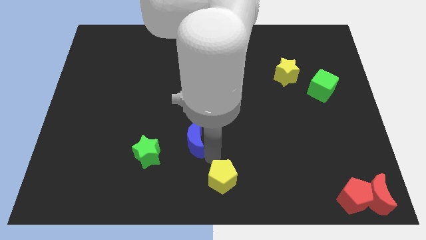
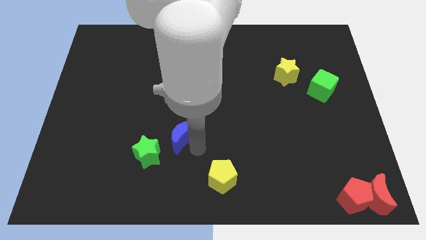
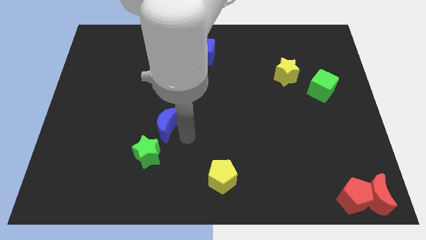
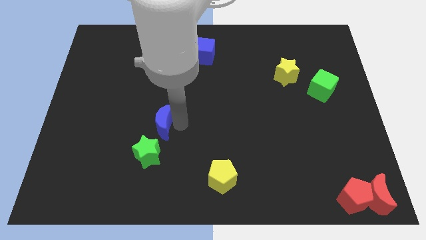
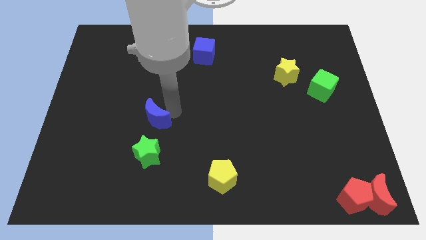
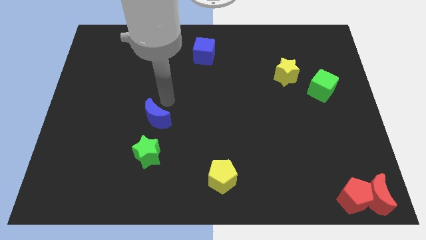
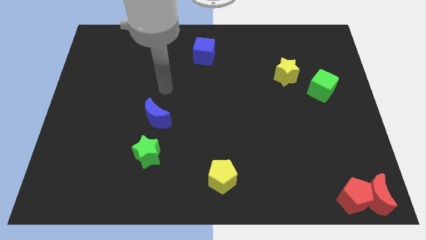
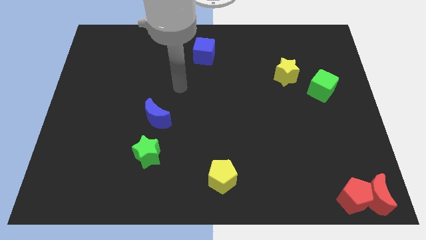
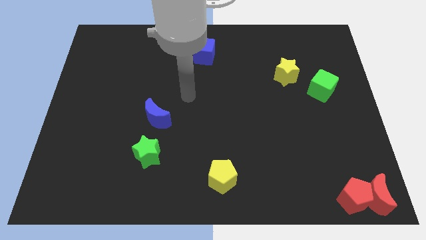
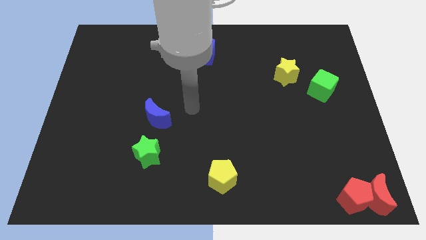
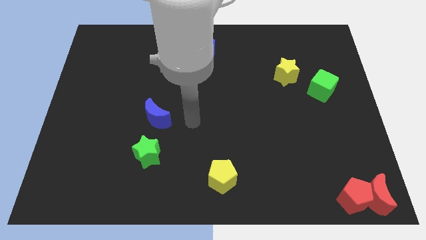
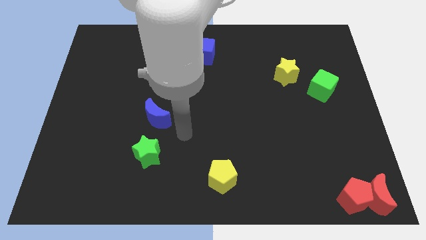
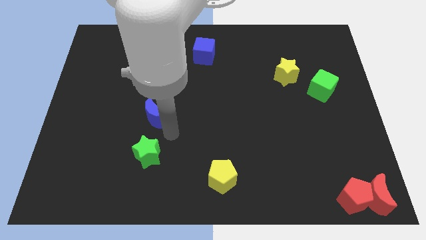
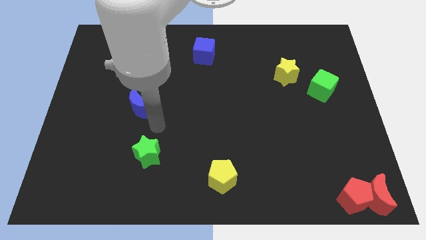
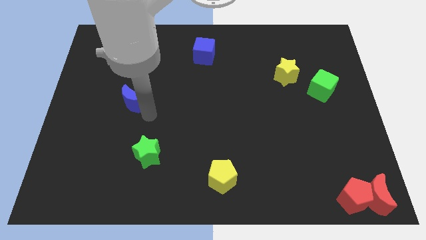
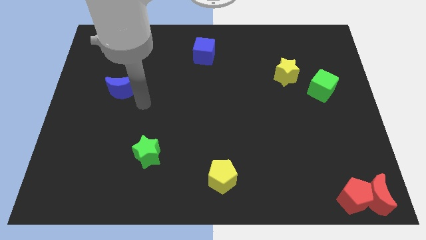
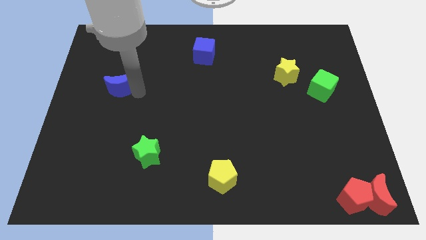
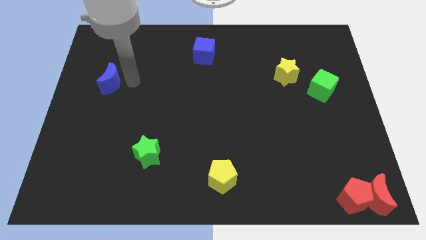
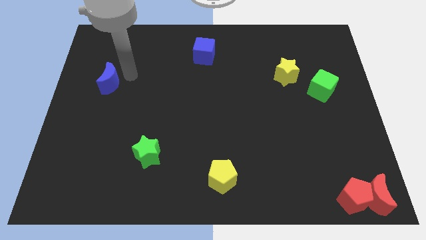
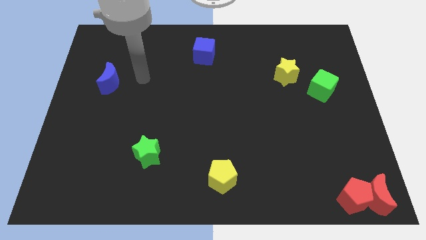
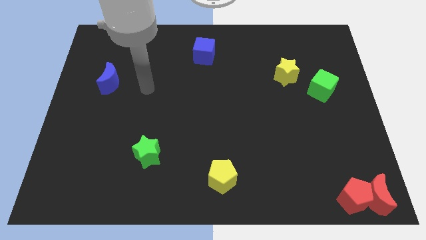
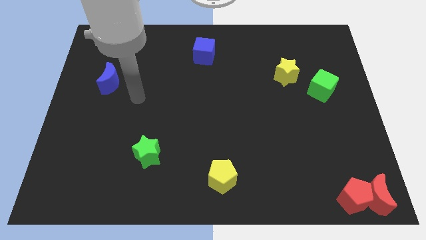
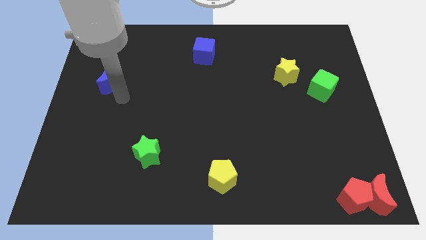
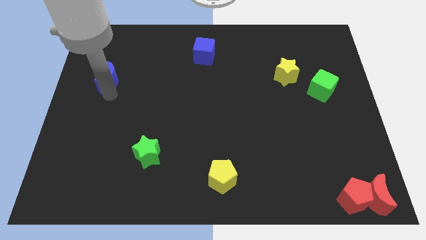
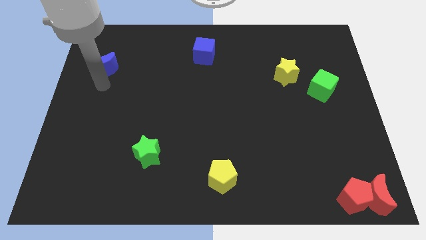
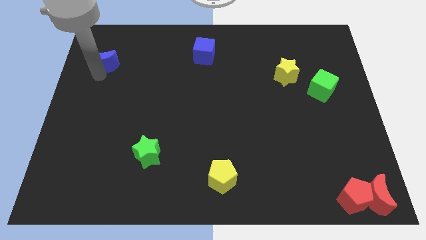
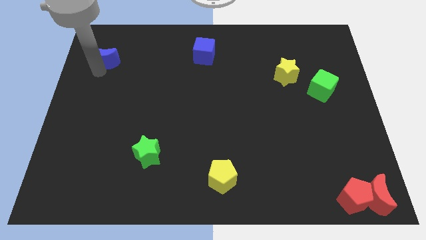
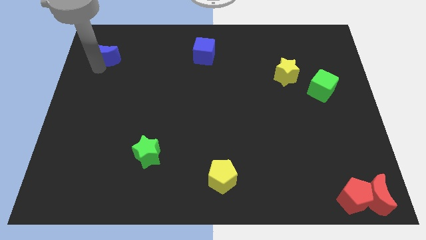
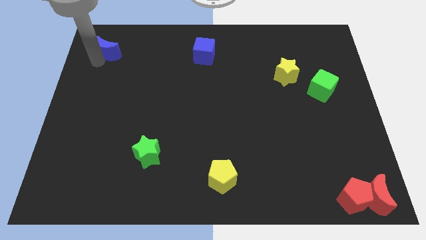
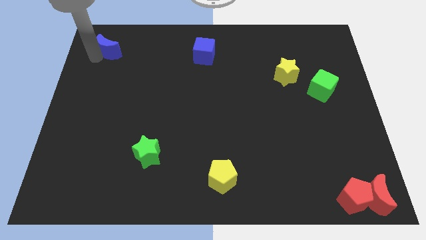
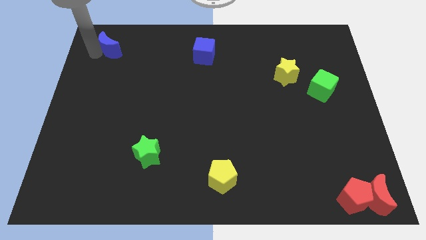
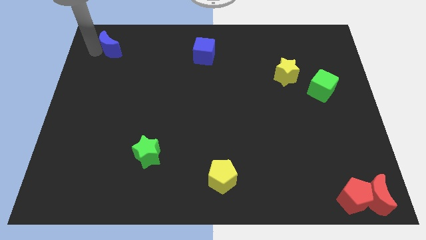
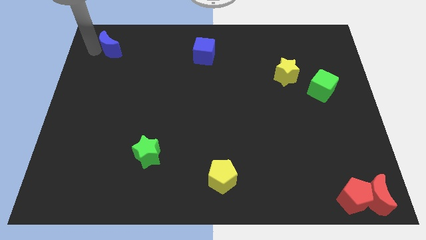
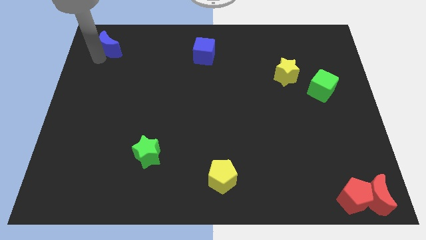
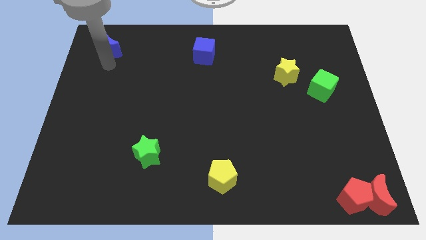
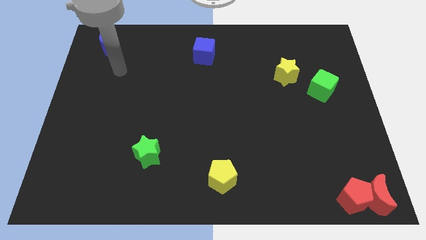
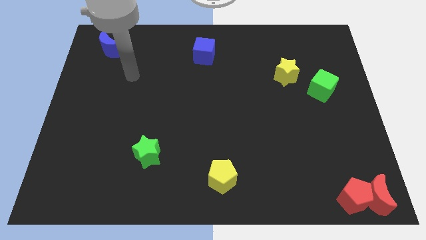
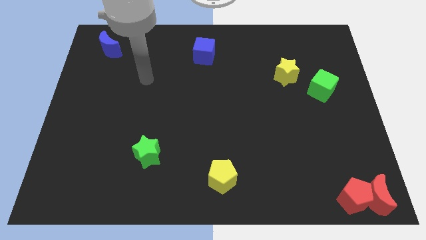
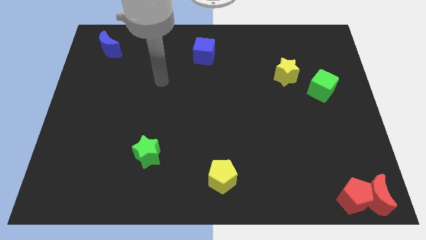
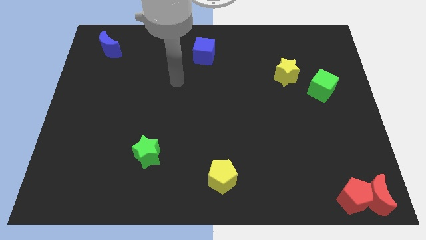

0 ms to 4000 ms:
push the blue crescent to the top of the board

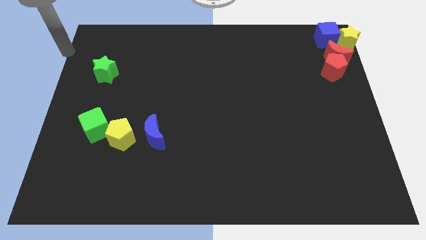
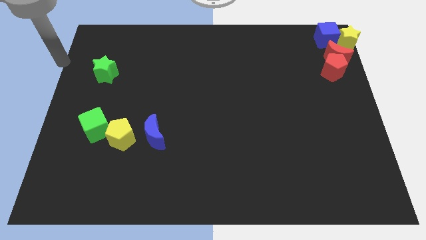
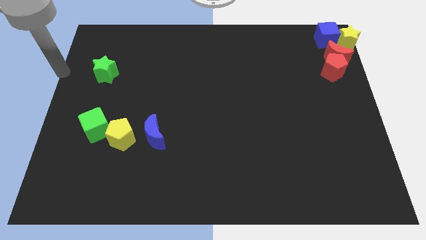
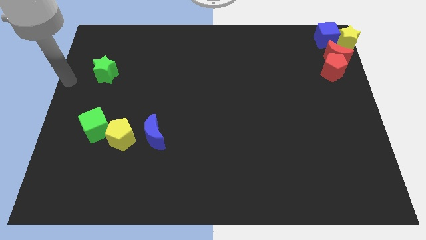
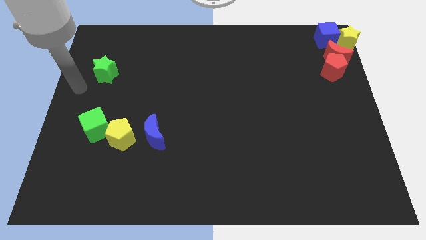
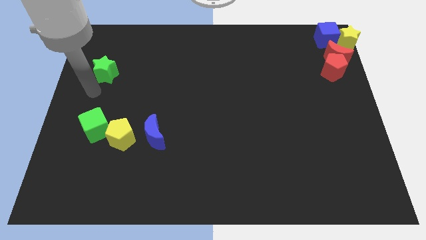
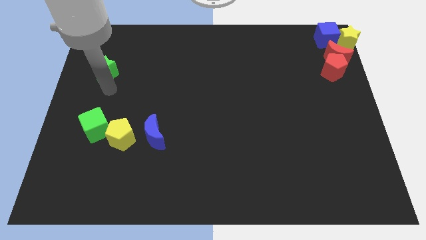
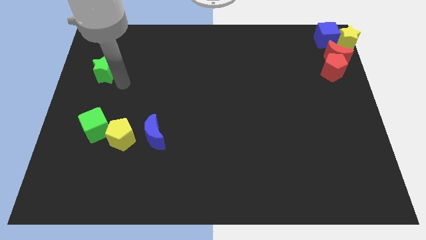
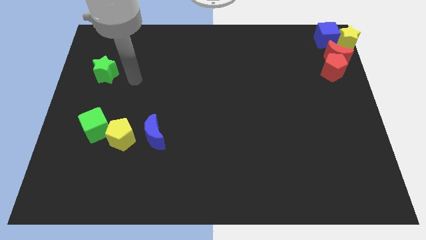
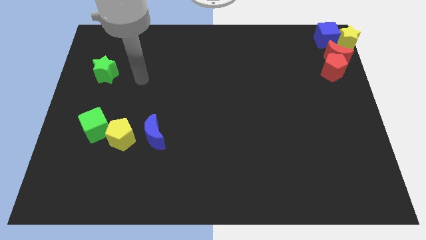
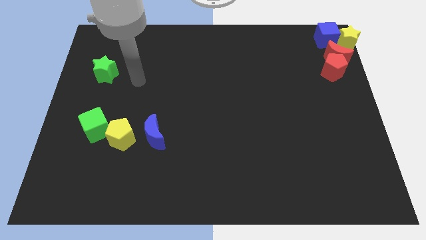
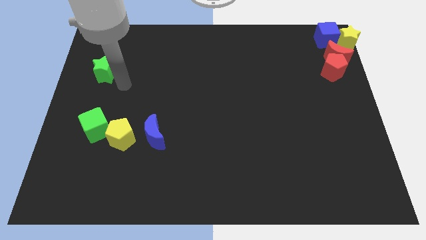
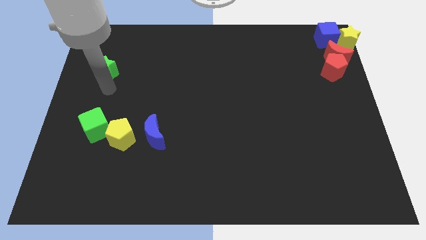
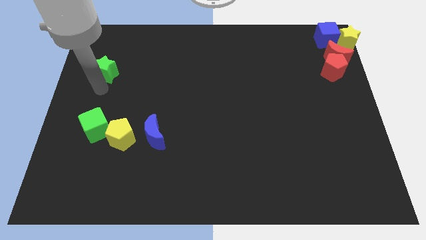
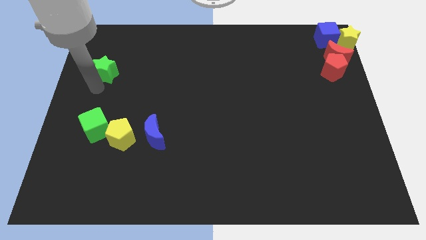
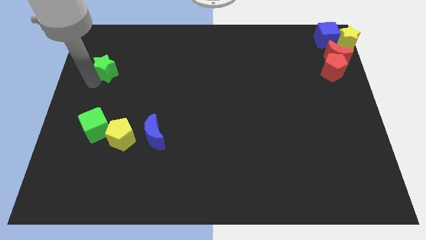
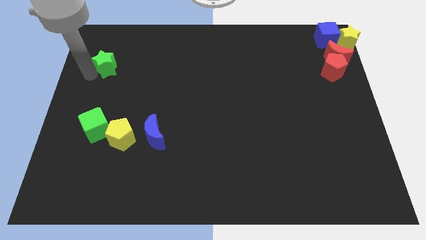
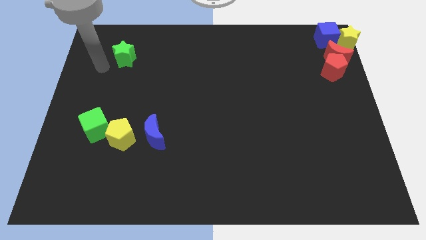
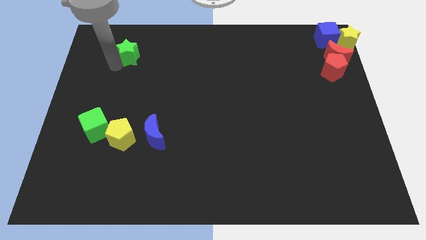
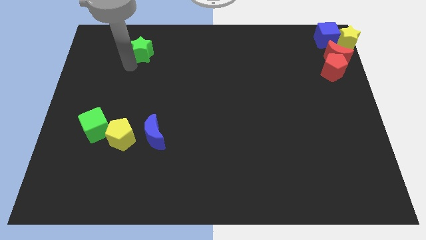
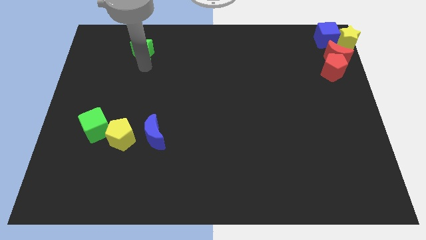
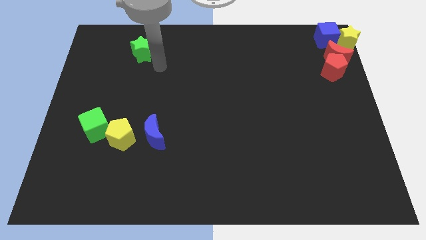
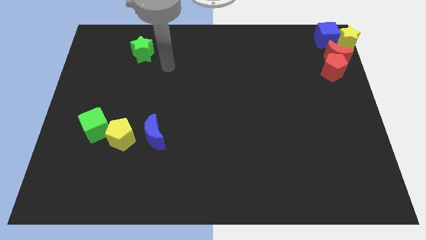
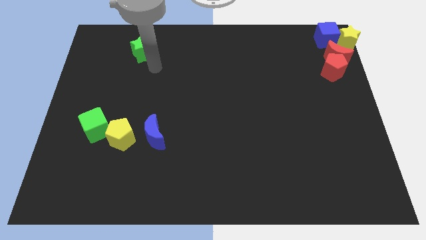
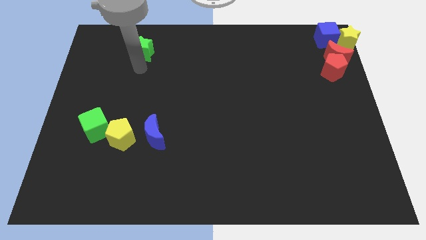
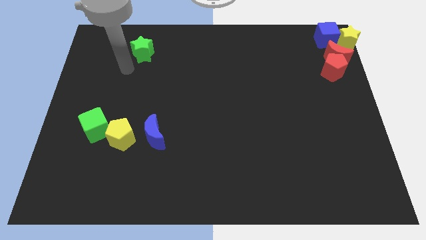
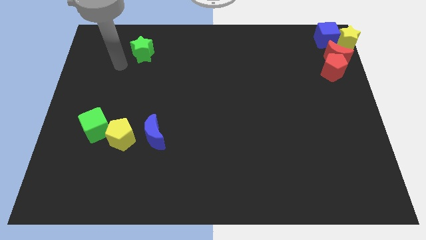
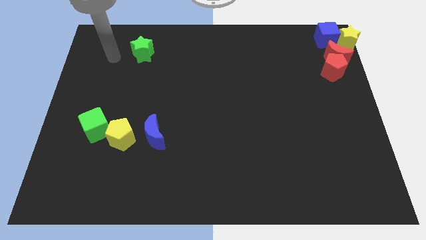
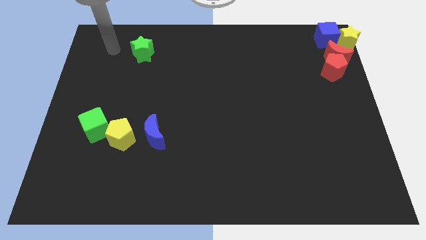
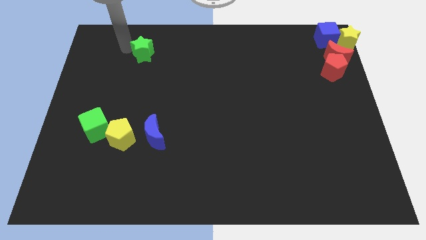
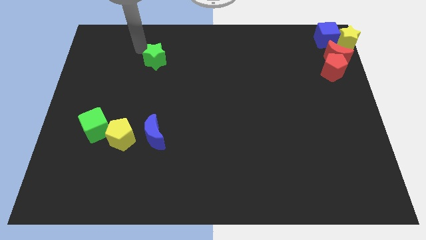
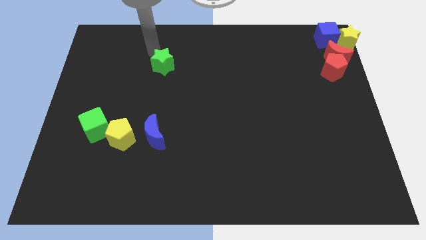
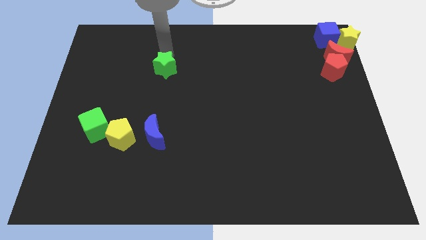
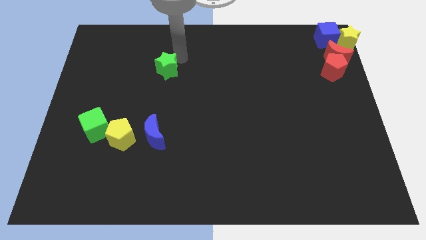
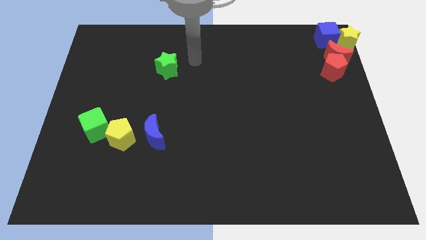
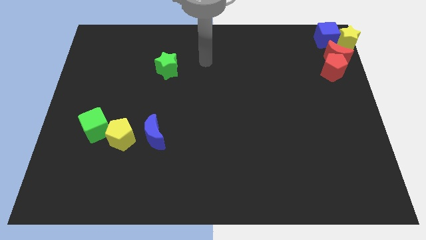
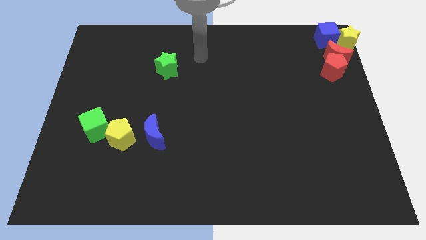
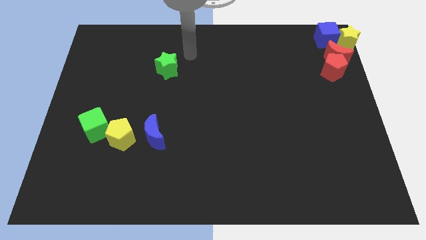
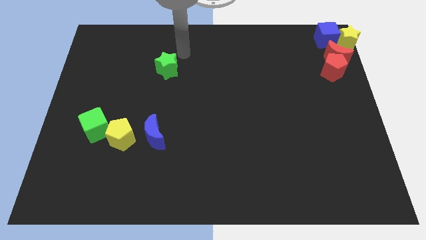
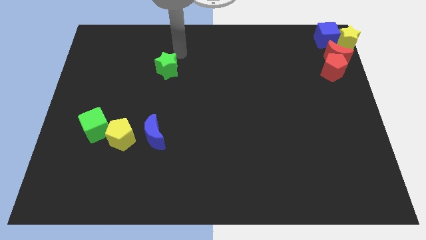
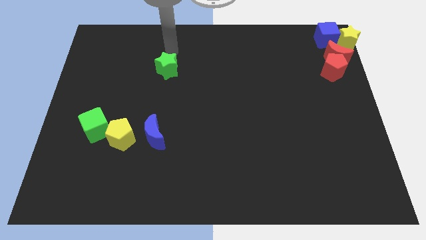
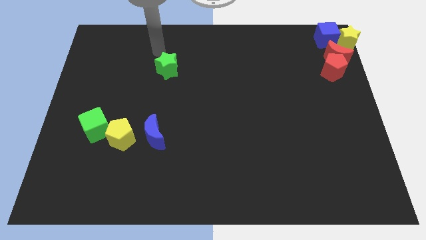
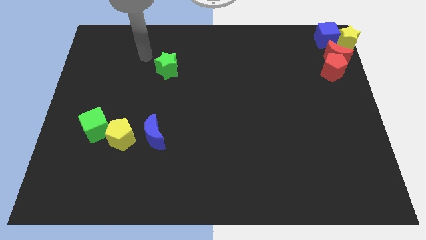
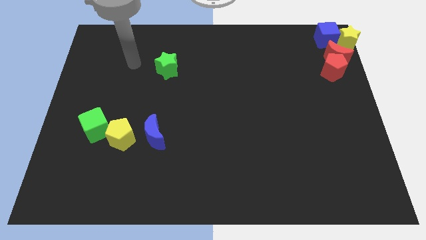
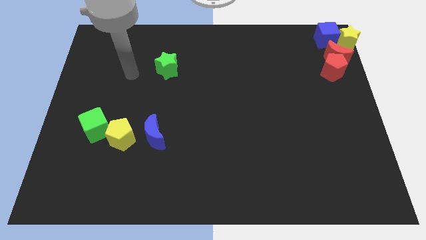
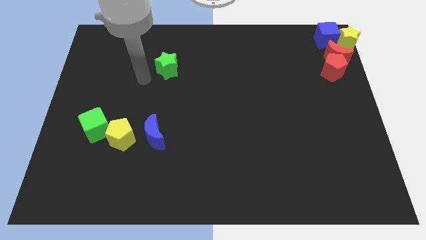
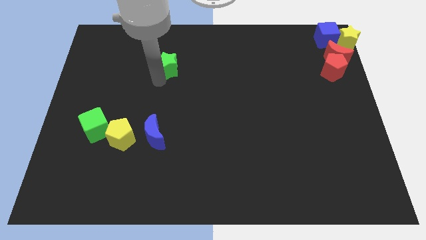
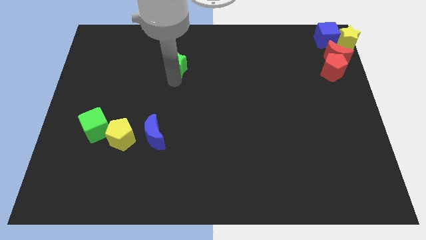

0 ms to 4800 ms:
place green star to the top of blue moon
